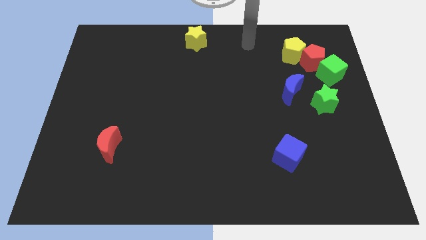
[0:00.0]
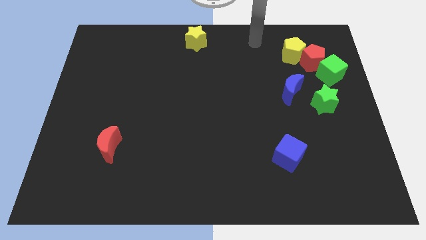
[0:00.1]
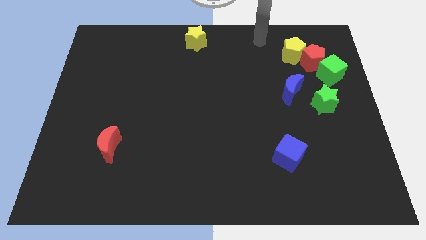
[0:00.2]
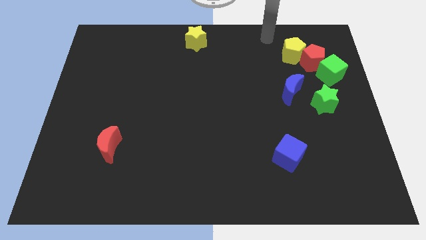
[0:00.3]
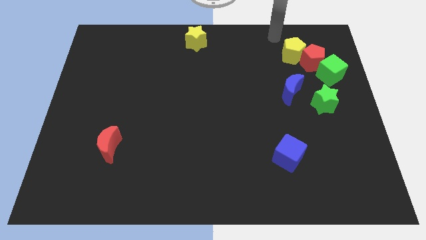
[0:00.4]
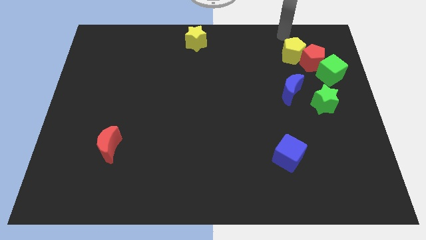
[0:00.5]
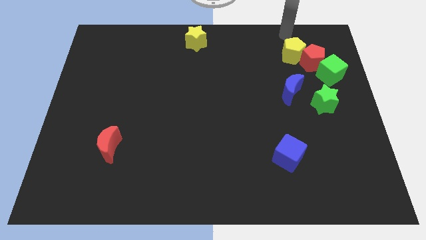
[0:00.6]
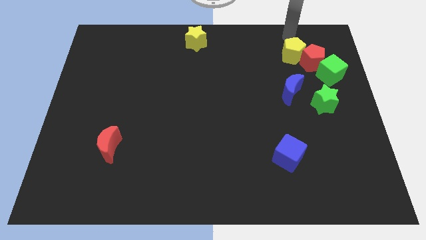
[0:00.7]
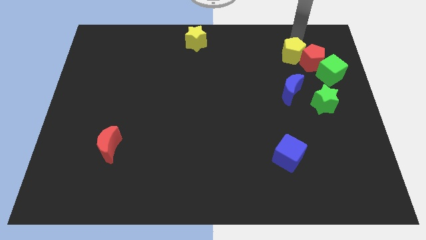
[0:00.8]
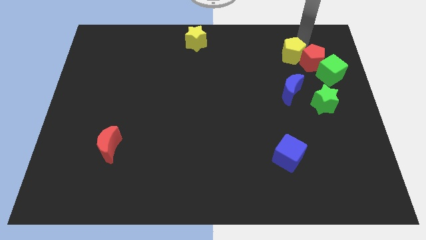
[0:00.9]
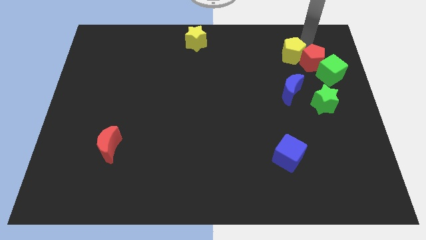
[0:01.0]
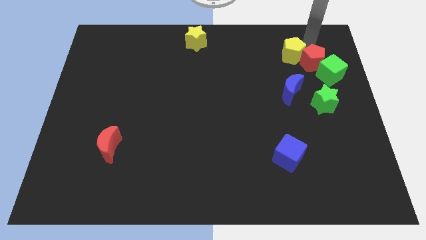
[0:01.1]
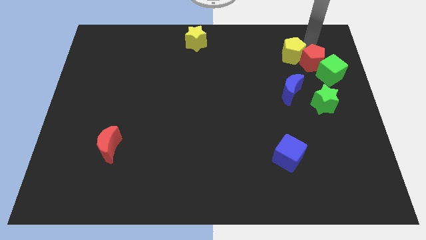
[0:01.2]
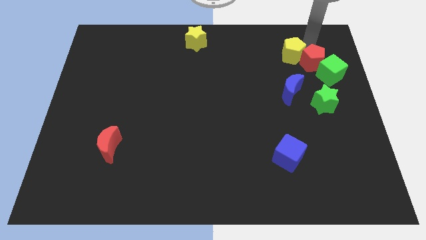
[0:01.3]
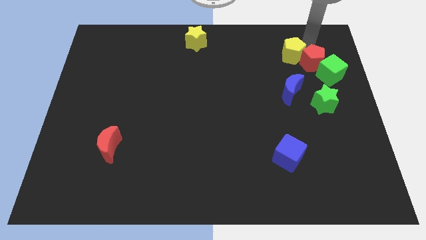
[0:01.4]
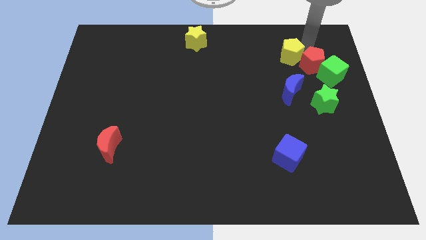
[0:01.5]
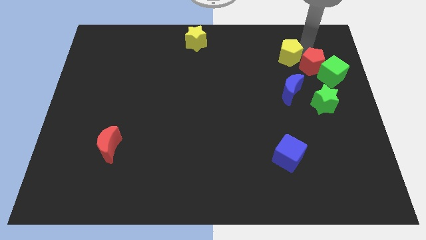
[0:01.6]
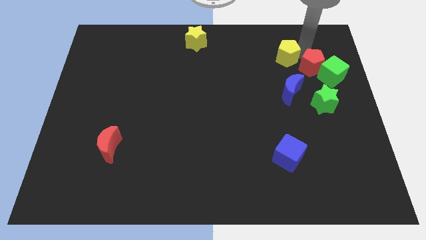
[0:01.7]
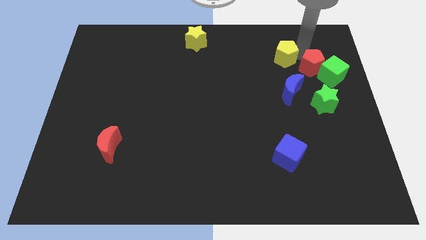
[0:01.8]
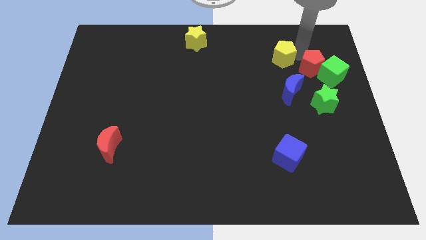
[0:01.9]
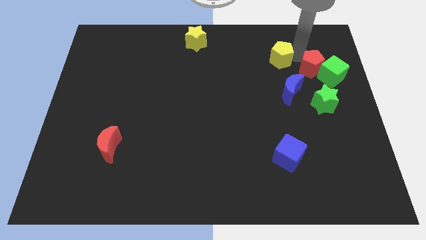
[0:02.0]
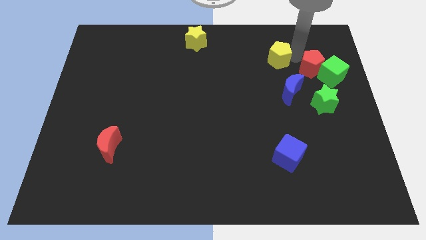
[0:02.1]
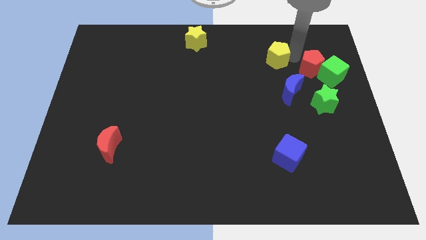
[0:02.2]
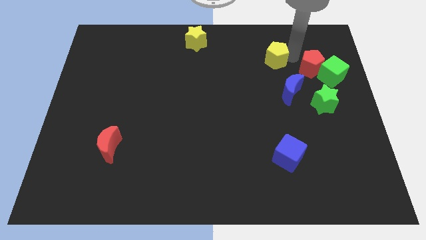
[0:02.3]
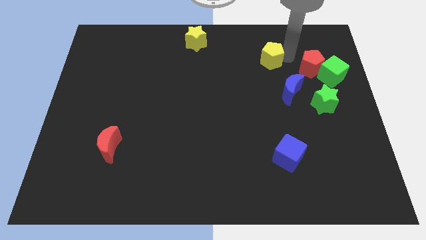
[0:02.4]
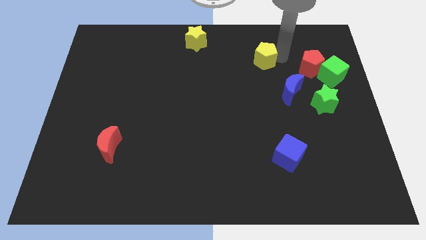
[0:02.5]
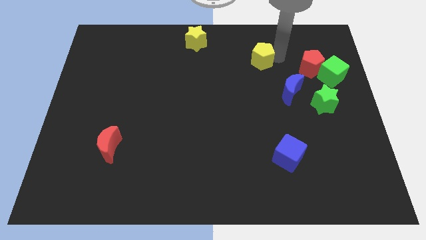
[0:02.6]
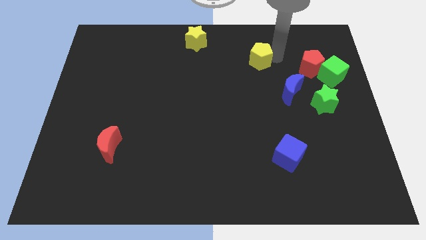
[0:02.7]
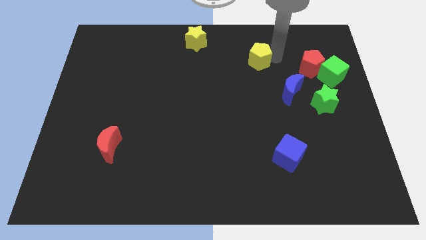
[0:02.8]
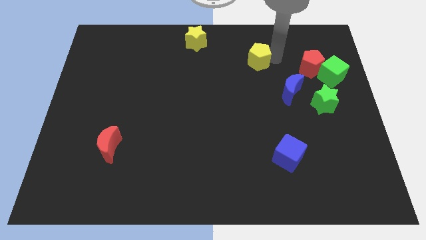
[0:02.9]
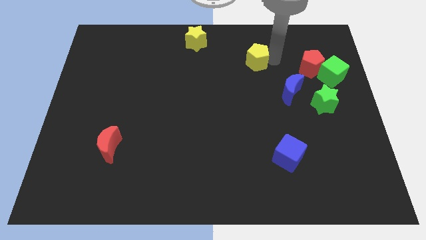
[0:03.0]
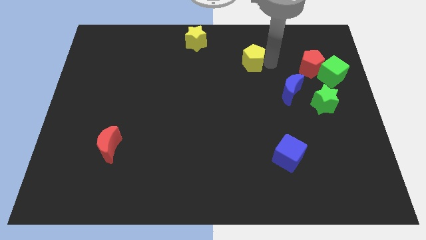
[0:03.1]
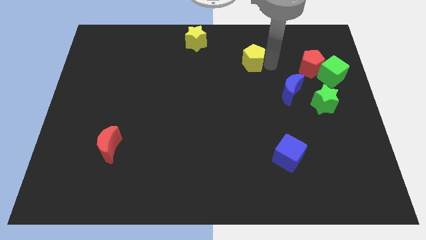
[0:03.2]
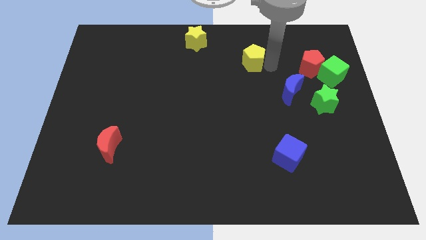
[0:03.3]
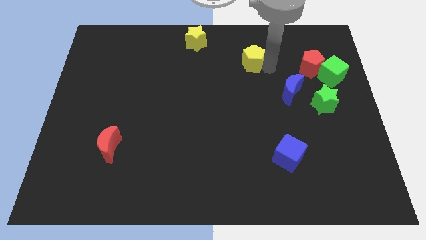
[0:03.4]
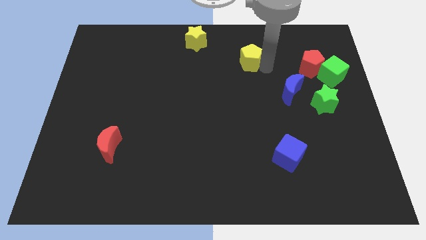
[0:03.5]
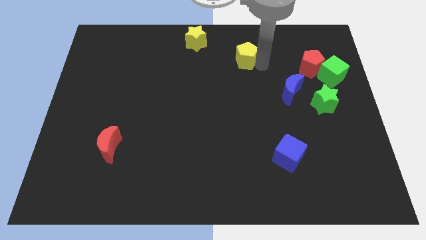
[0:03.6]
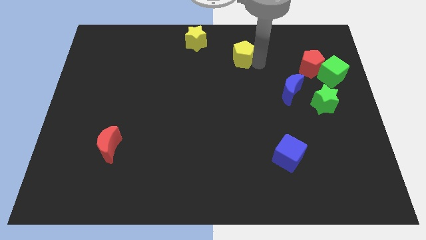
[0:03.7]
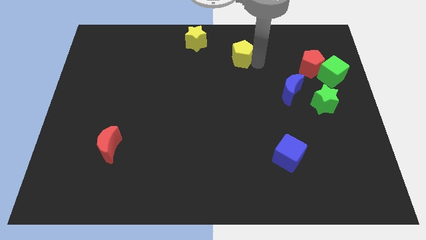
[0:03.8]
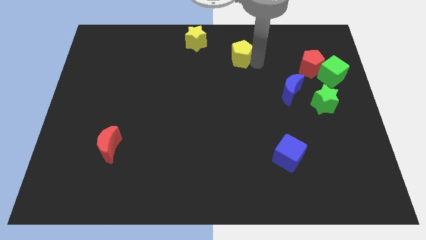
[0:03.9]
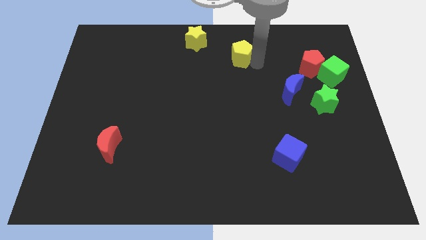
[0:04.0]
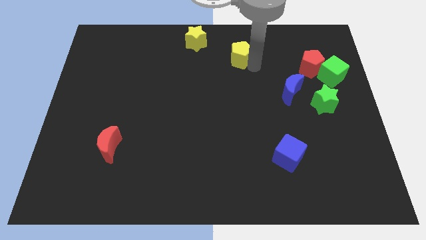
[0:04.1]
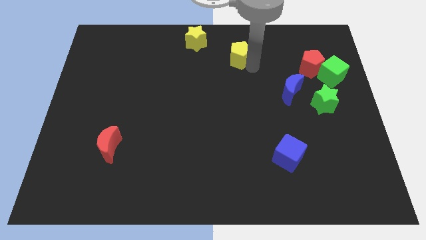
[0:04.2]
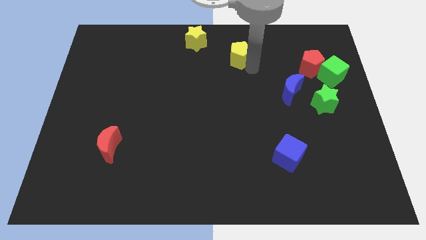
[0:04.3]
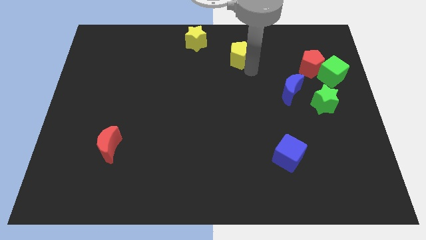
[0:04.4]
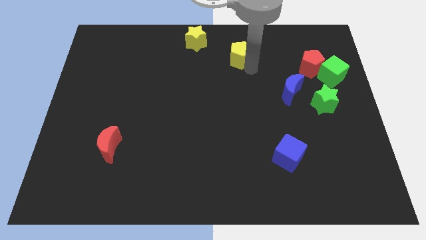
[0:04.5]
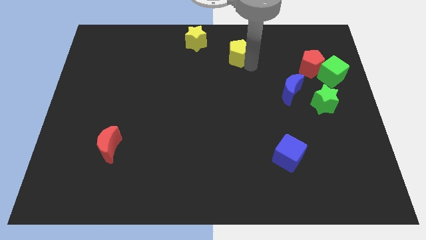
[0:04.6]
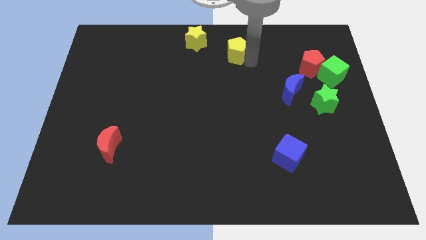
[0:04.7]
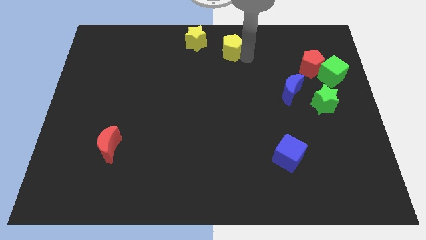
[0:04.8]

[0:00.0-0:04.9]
separate the yellow pentagon from the red pentagon

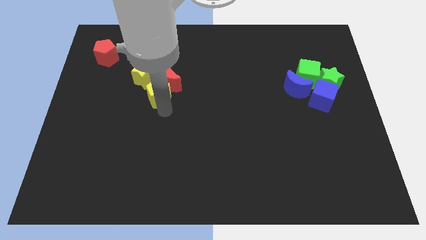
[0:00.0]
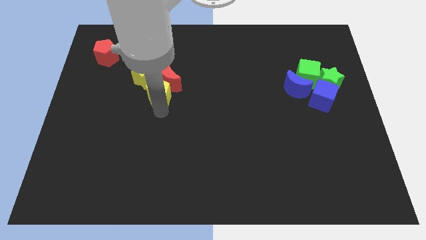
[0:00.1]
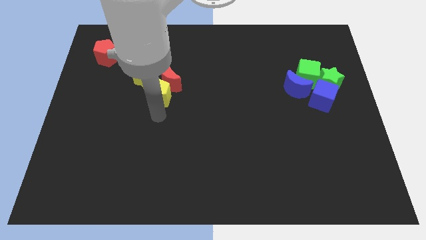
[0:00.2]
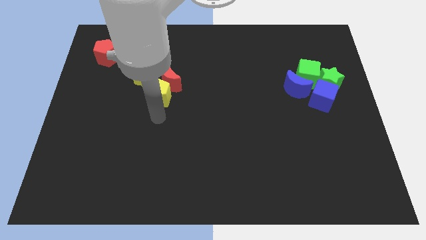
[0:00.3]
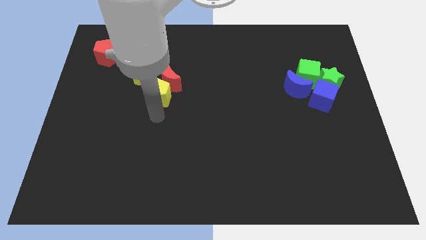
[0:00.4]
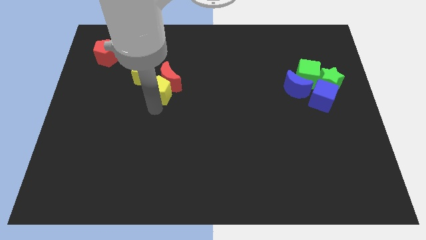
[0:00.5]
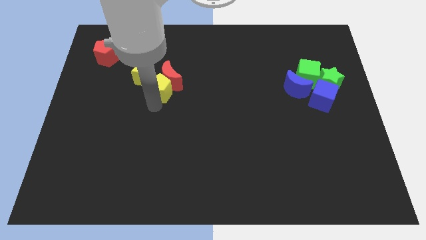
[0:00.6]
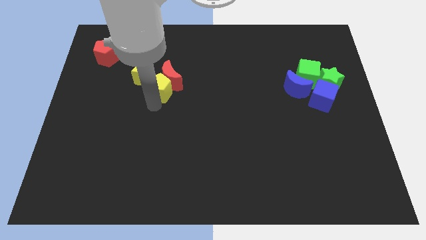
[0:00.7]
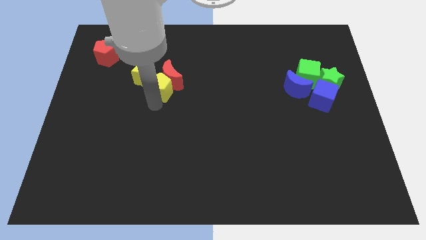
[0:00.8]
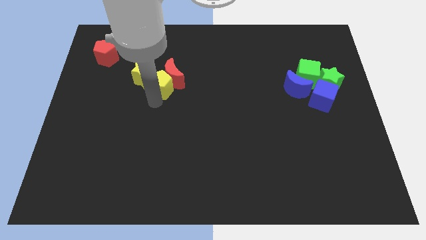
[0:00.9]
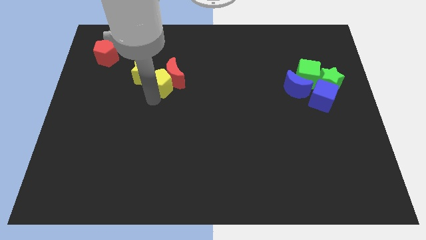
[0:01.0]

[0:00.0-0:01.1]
move the yellow pentagon in between the yellow star and red moon

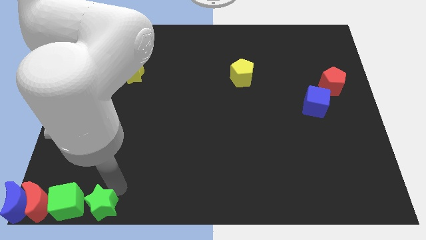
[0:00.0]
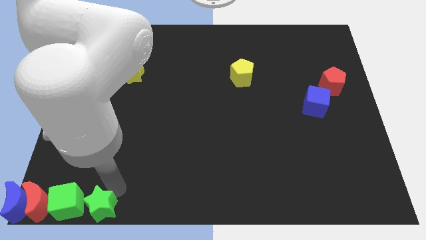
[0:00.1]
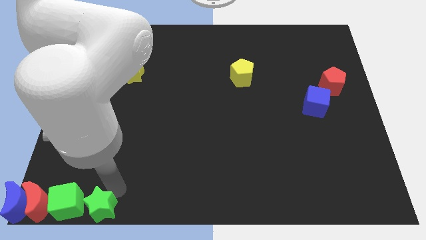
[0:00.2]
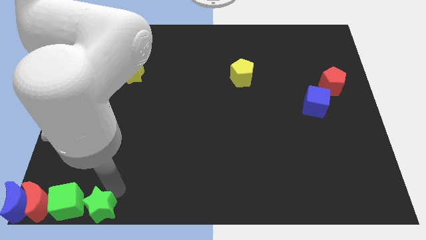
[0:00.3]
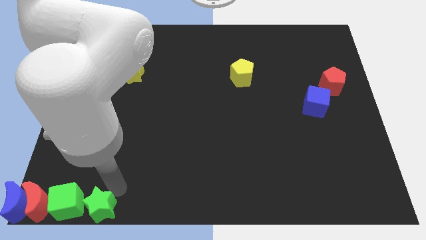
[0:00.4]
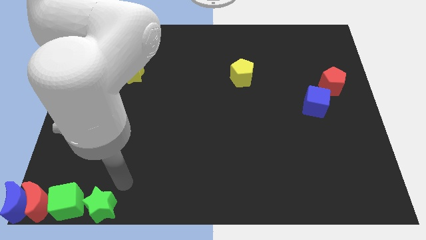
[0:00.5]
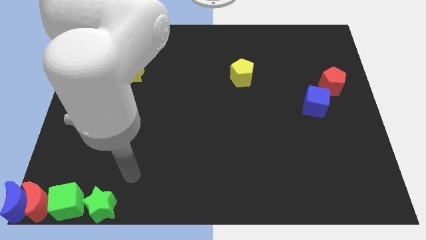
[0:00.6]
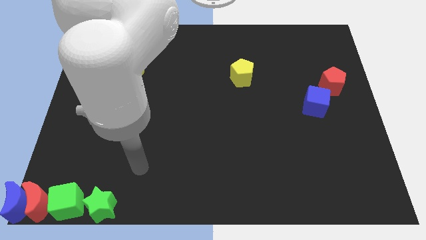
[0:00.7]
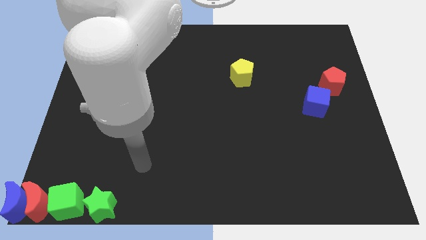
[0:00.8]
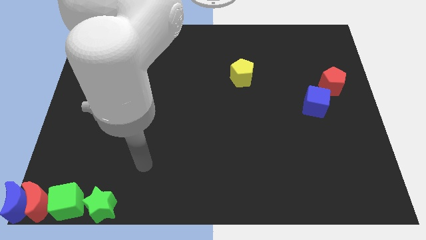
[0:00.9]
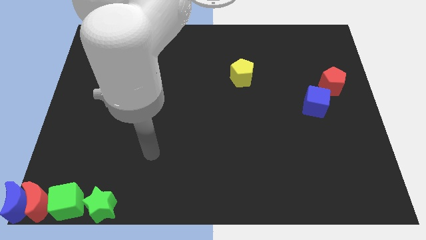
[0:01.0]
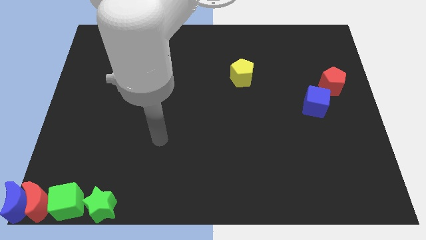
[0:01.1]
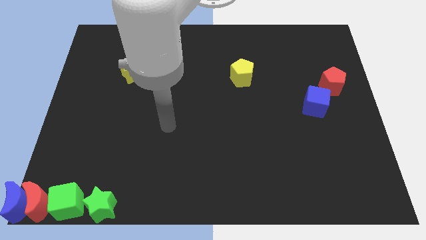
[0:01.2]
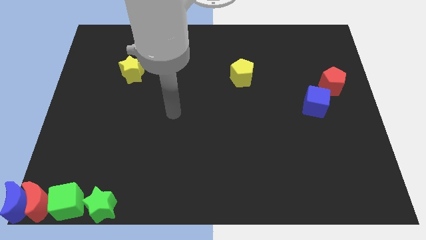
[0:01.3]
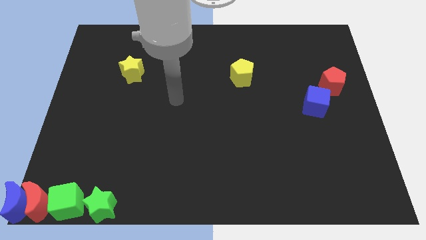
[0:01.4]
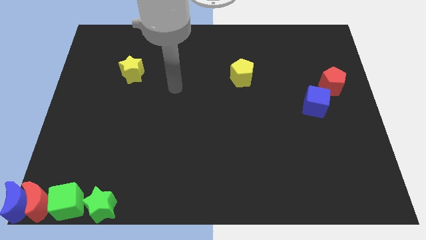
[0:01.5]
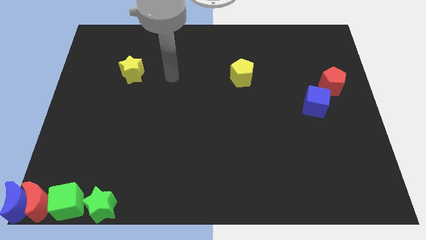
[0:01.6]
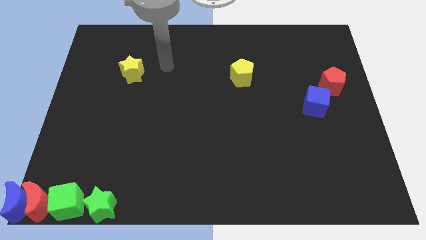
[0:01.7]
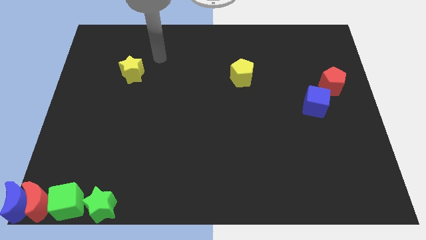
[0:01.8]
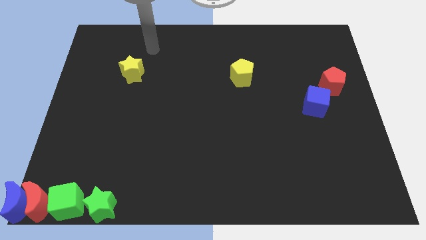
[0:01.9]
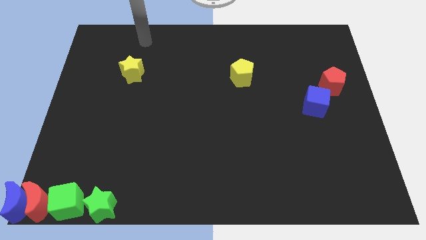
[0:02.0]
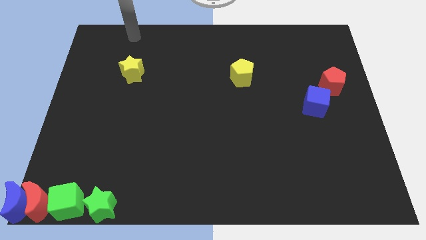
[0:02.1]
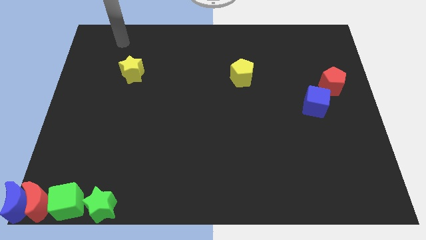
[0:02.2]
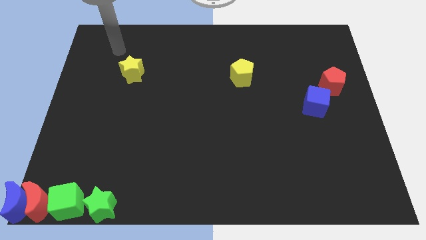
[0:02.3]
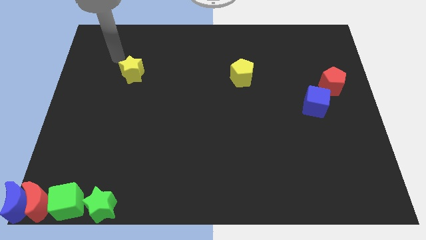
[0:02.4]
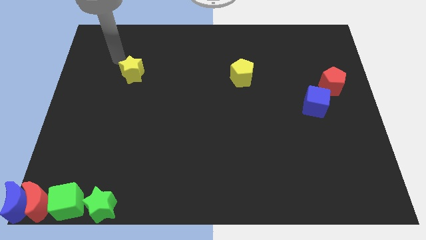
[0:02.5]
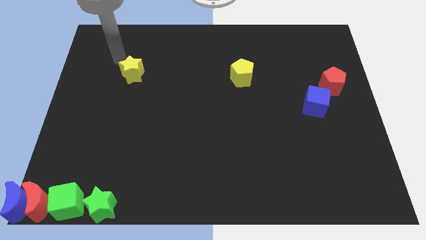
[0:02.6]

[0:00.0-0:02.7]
place the arm near the yellow star

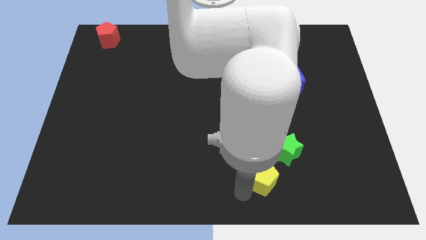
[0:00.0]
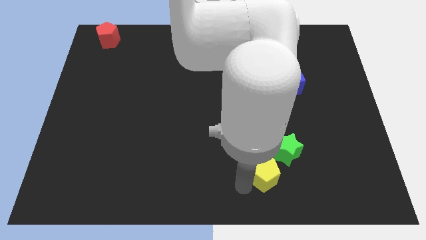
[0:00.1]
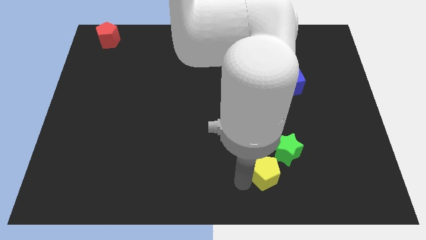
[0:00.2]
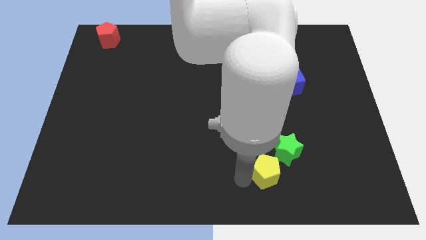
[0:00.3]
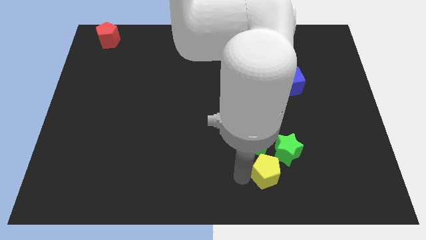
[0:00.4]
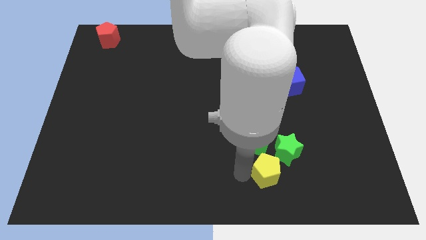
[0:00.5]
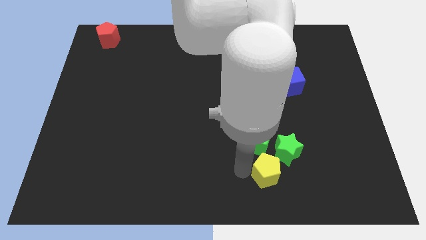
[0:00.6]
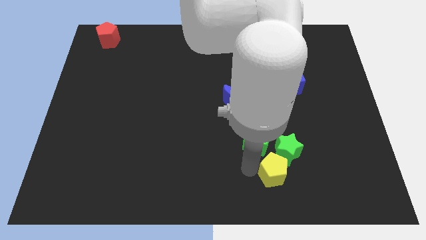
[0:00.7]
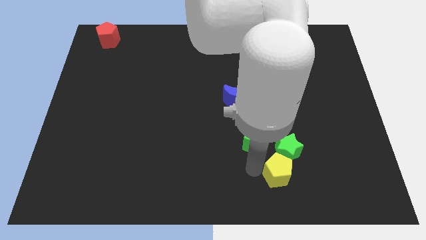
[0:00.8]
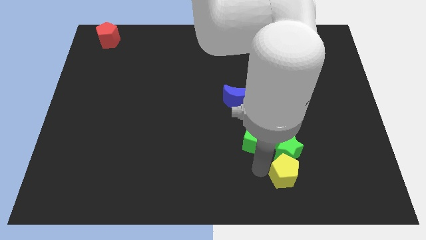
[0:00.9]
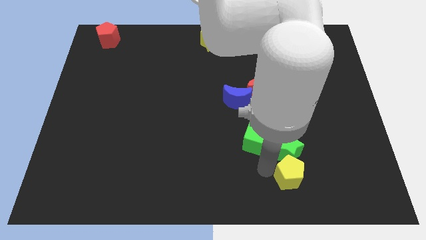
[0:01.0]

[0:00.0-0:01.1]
put the yellow pentagon at the bottom of the green star
